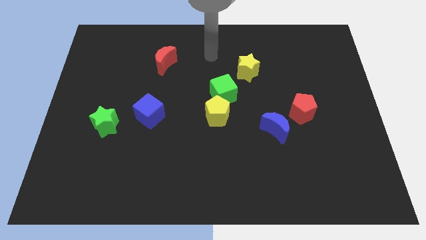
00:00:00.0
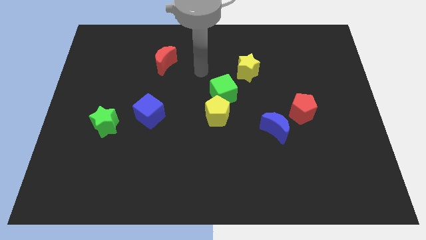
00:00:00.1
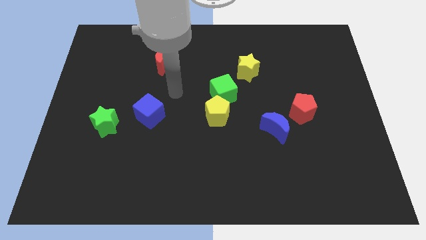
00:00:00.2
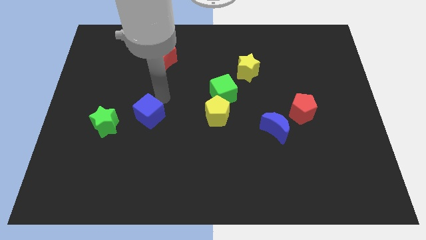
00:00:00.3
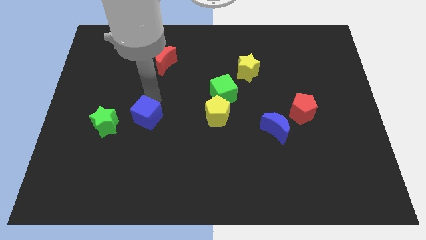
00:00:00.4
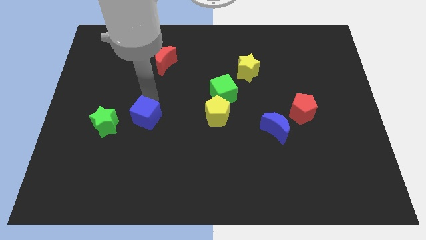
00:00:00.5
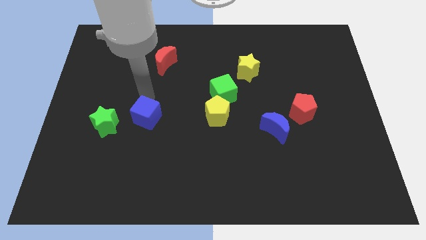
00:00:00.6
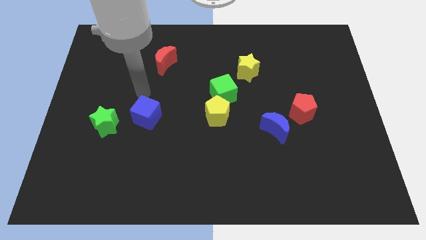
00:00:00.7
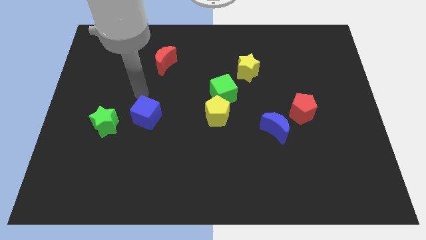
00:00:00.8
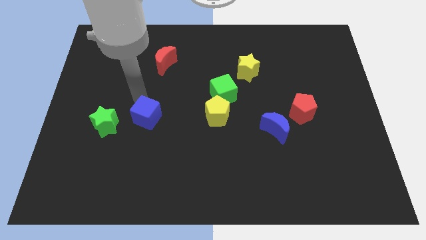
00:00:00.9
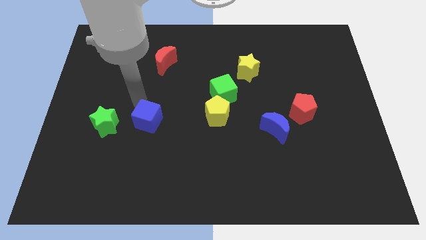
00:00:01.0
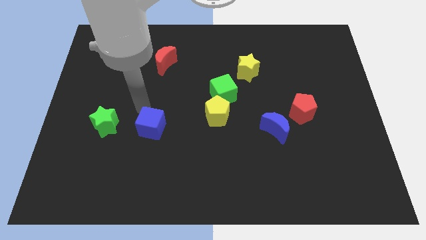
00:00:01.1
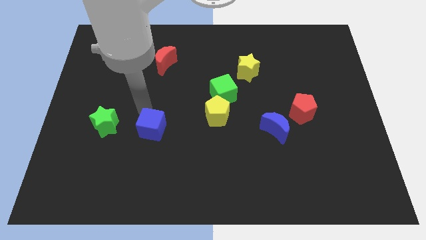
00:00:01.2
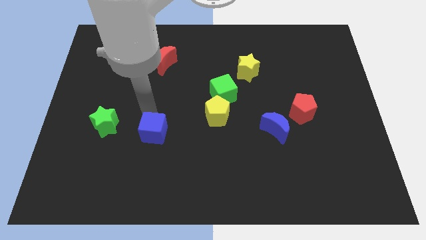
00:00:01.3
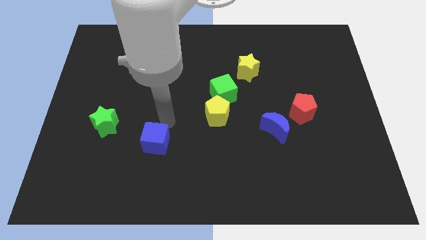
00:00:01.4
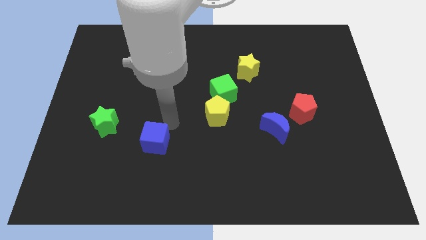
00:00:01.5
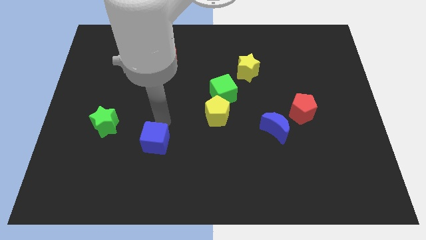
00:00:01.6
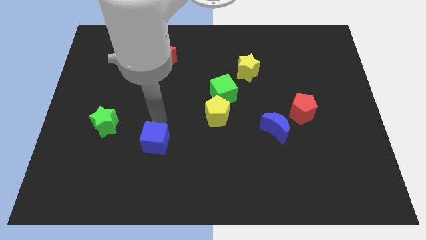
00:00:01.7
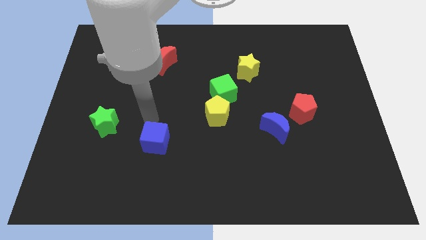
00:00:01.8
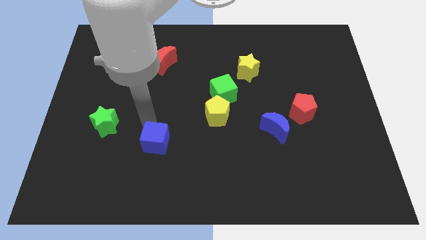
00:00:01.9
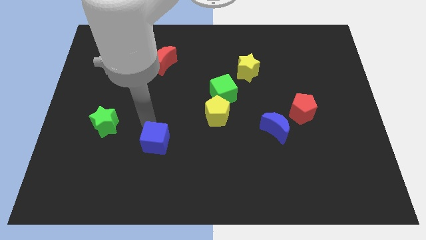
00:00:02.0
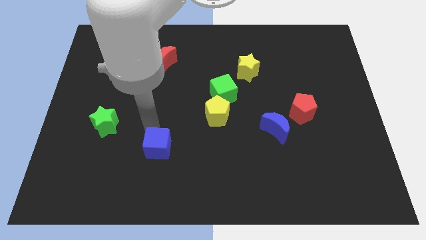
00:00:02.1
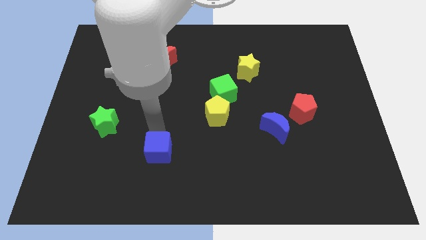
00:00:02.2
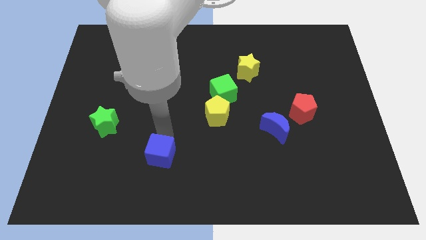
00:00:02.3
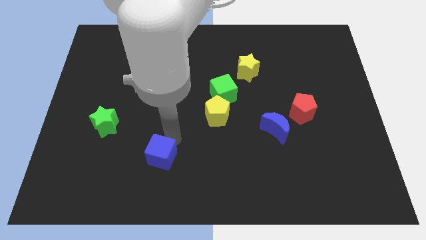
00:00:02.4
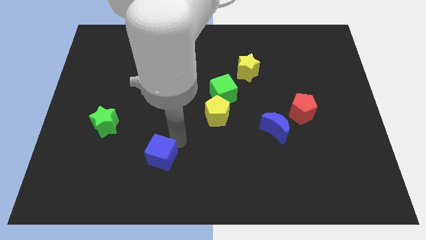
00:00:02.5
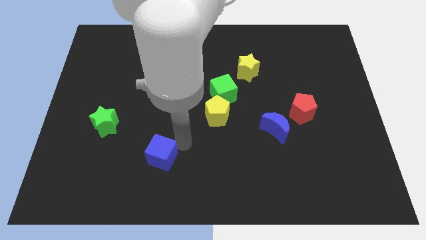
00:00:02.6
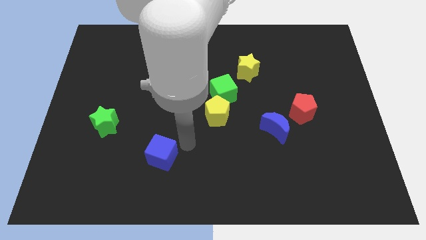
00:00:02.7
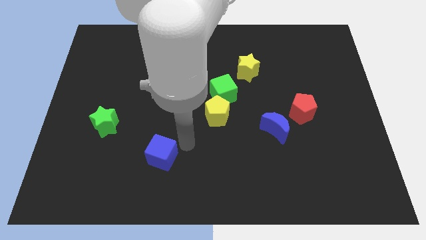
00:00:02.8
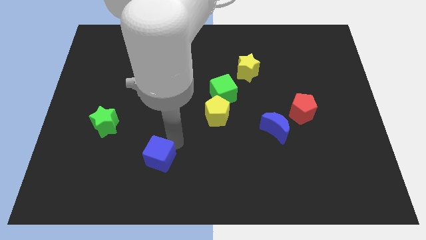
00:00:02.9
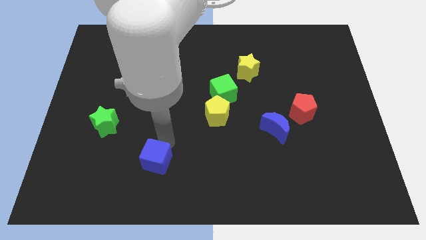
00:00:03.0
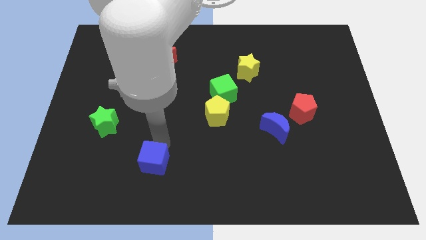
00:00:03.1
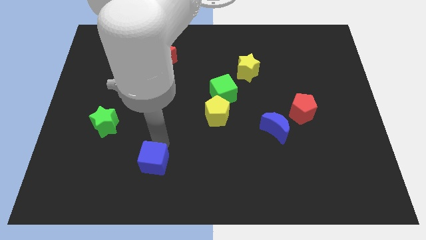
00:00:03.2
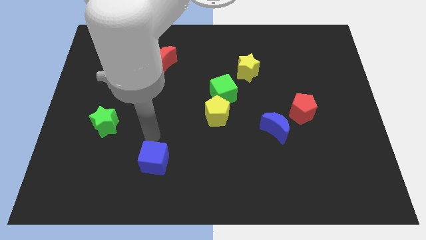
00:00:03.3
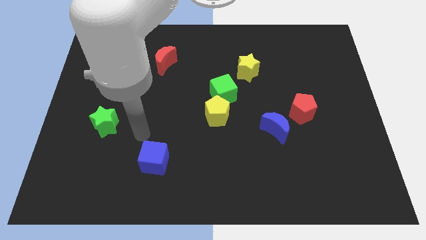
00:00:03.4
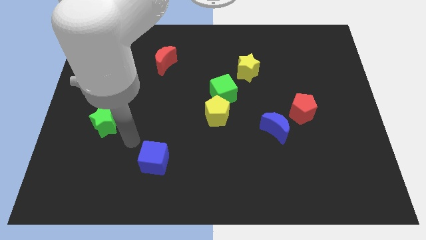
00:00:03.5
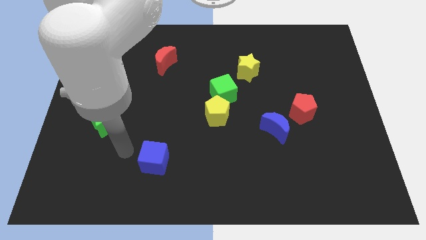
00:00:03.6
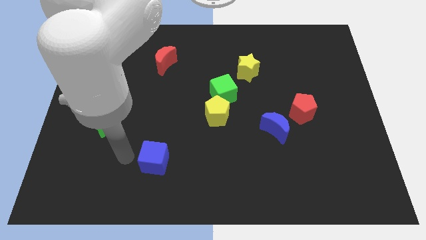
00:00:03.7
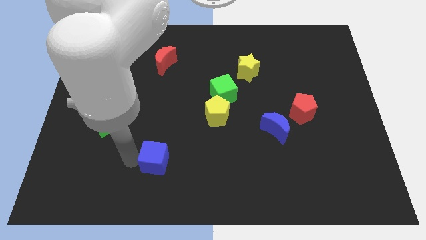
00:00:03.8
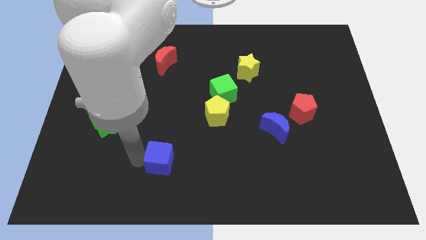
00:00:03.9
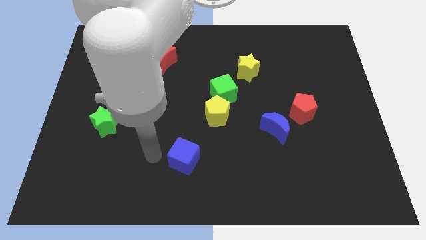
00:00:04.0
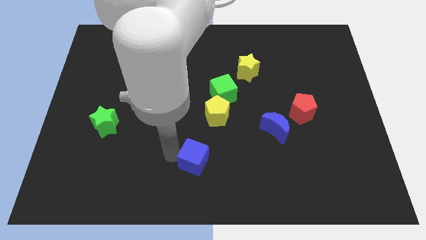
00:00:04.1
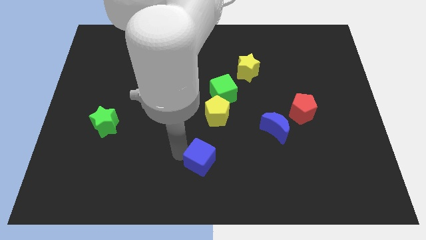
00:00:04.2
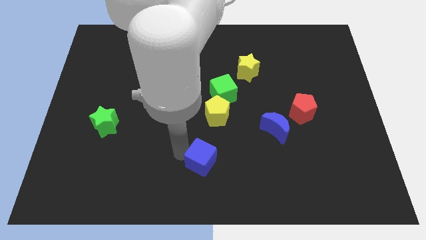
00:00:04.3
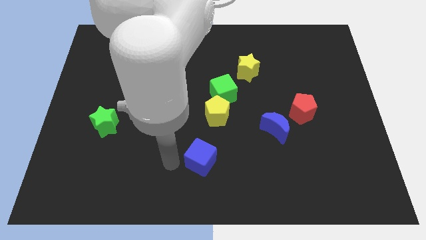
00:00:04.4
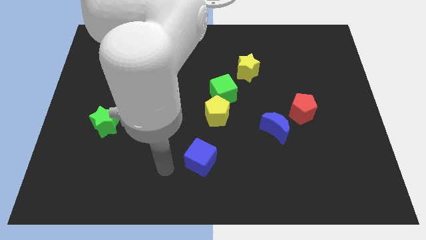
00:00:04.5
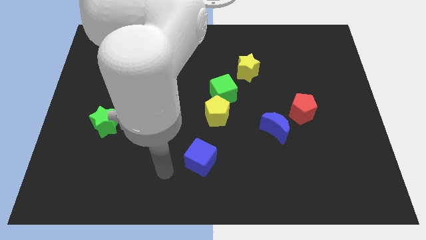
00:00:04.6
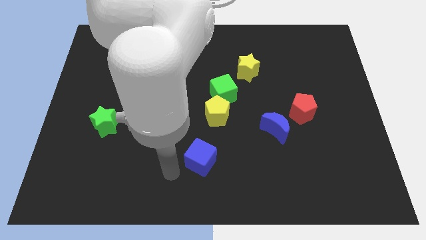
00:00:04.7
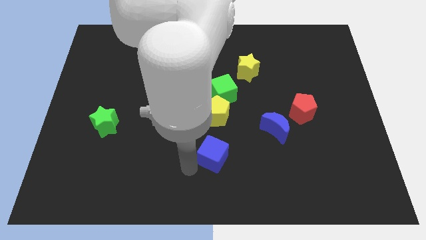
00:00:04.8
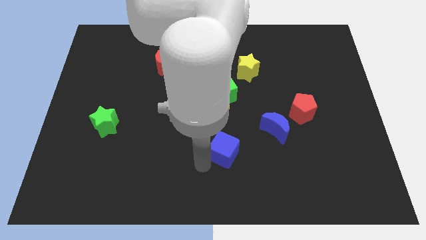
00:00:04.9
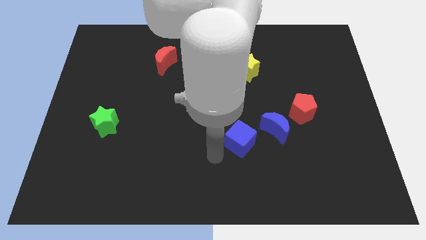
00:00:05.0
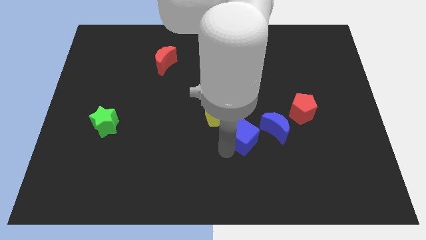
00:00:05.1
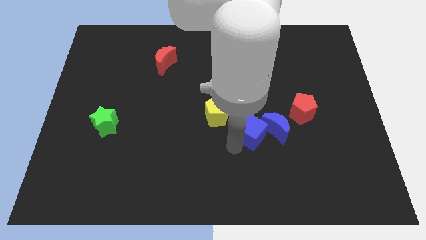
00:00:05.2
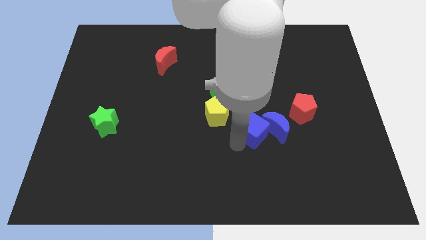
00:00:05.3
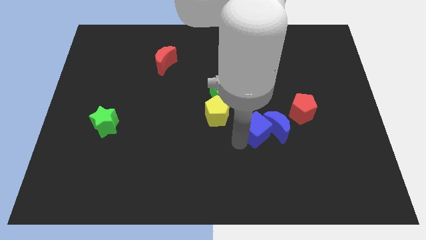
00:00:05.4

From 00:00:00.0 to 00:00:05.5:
push the blue cube next to the blue moon

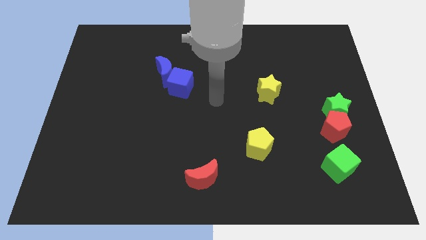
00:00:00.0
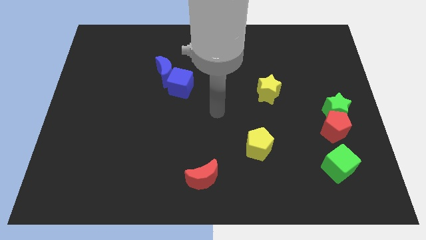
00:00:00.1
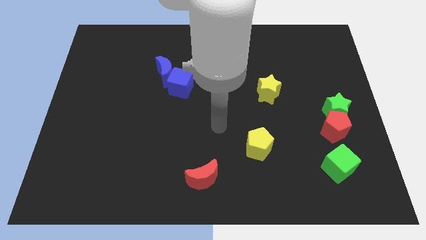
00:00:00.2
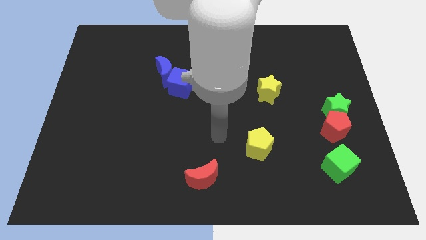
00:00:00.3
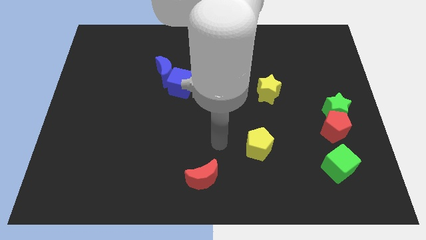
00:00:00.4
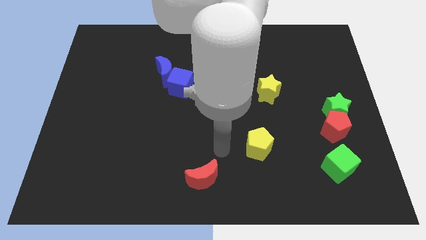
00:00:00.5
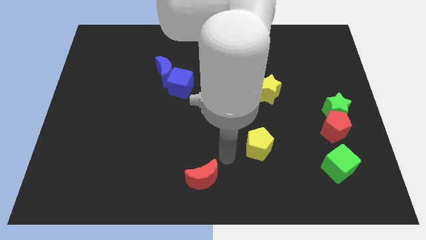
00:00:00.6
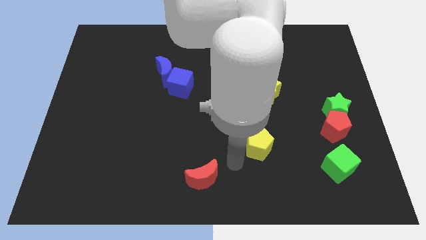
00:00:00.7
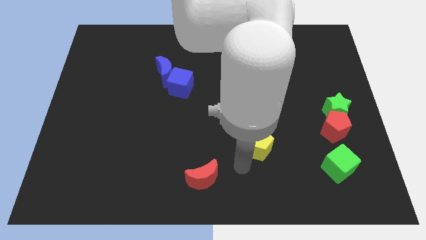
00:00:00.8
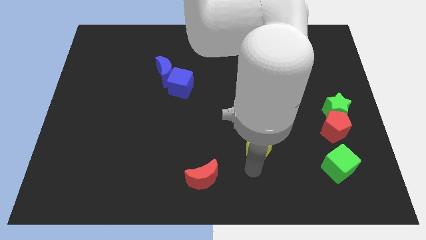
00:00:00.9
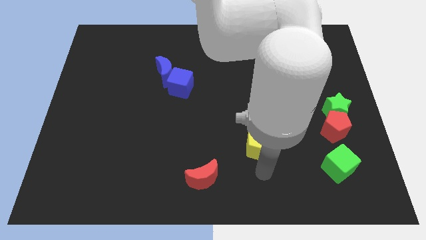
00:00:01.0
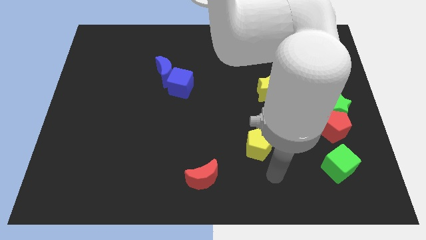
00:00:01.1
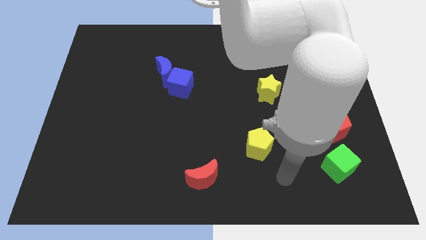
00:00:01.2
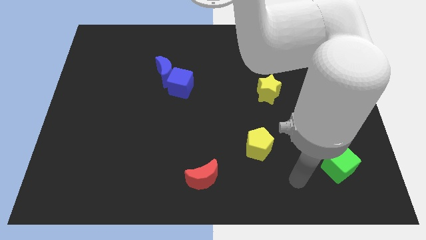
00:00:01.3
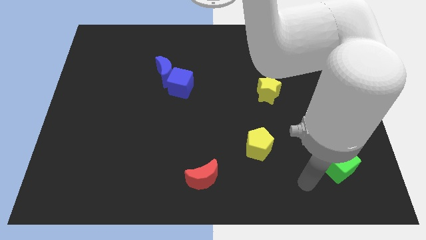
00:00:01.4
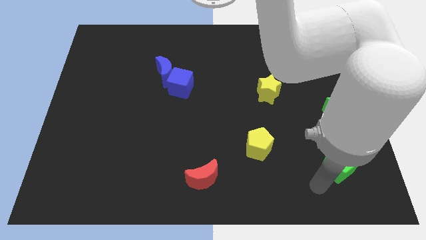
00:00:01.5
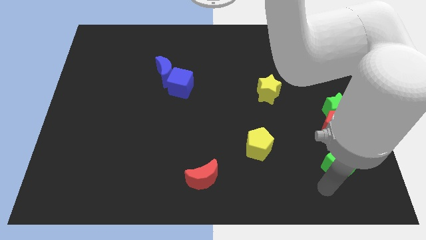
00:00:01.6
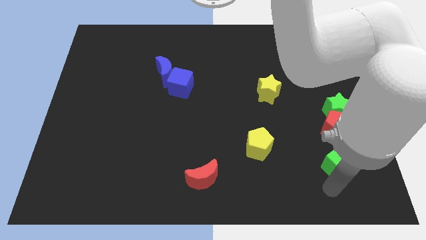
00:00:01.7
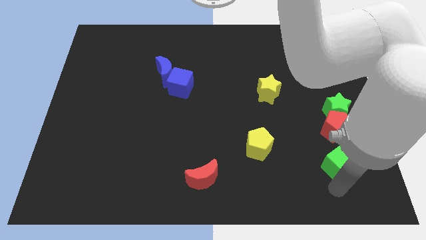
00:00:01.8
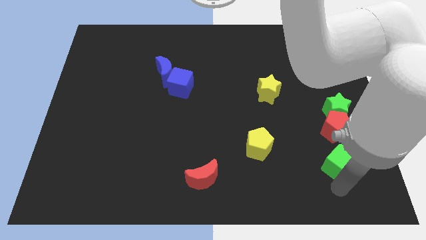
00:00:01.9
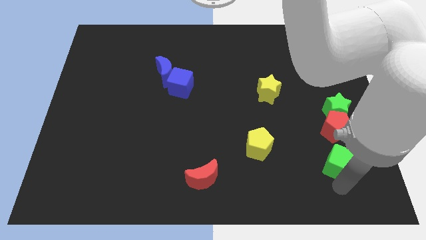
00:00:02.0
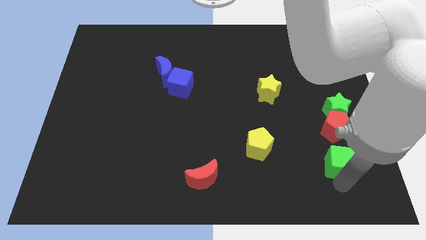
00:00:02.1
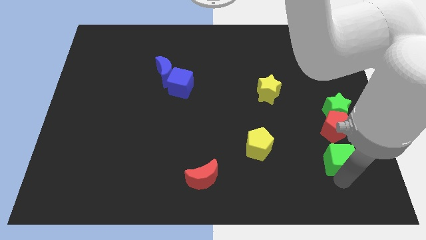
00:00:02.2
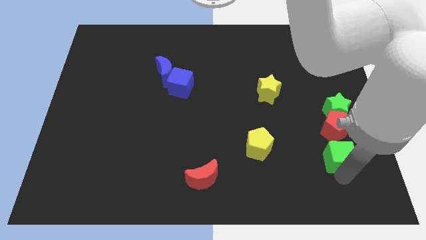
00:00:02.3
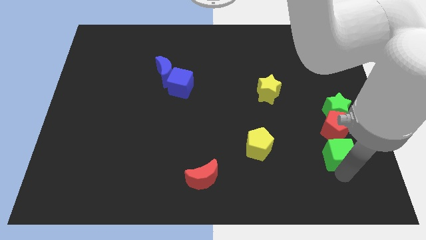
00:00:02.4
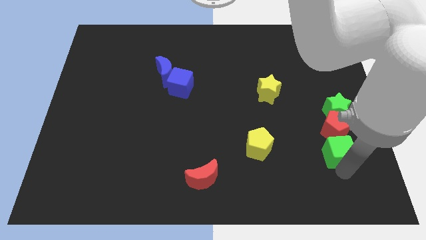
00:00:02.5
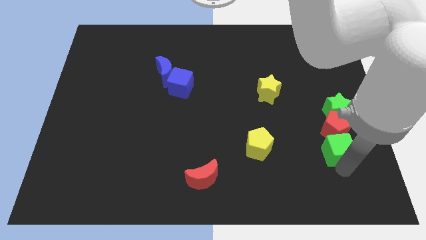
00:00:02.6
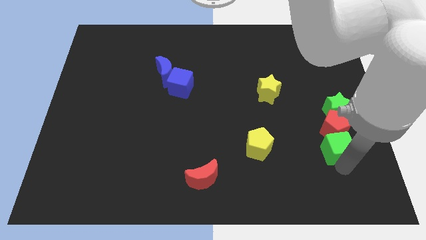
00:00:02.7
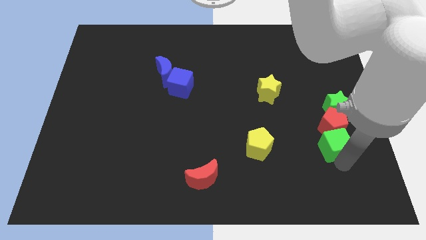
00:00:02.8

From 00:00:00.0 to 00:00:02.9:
push the green cube close to the red pentagon

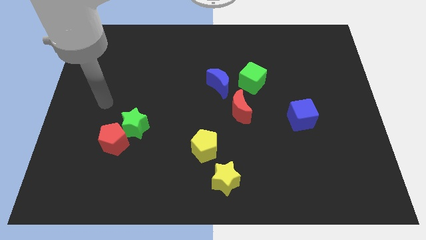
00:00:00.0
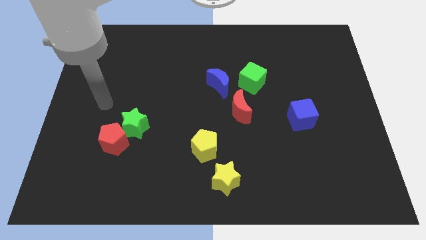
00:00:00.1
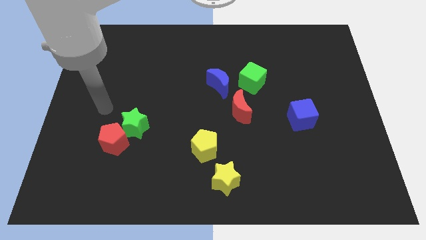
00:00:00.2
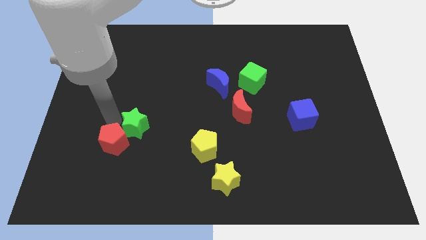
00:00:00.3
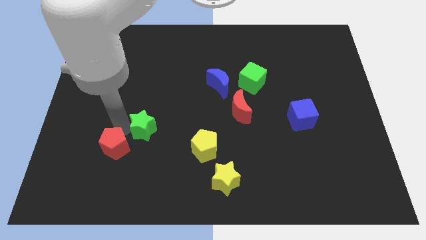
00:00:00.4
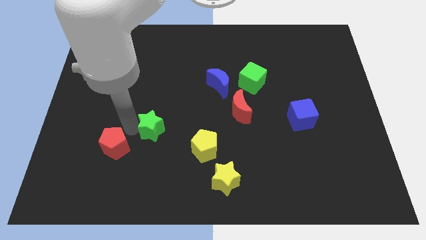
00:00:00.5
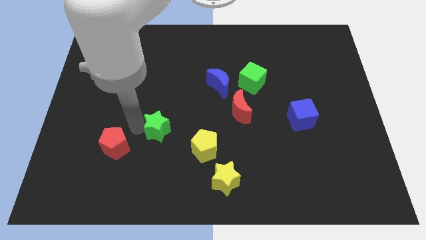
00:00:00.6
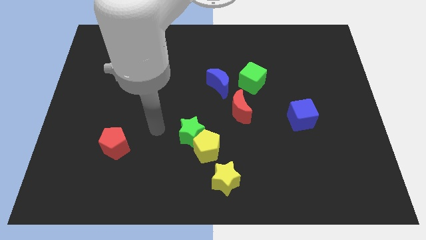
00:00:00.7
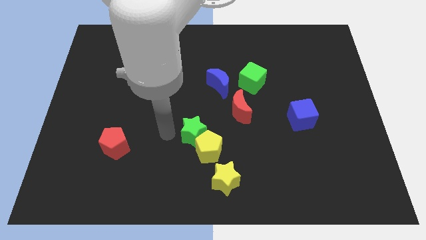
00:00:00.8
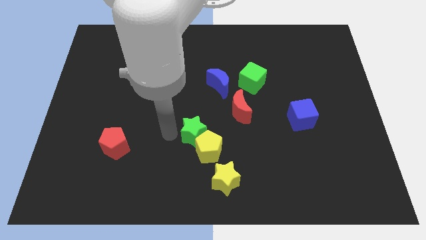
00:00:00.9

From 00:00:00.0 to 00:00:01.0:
move the green star next to the yellow pentagon
